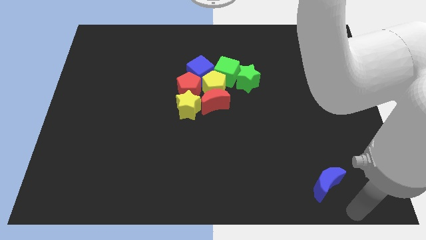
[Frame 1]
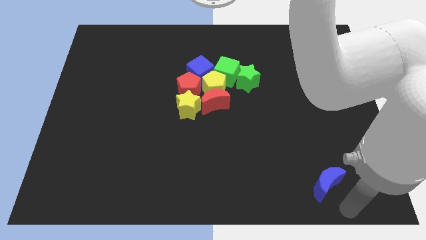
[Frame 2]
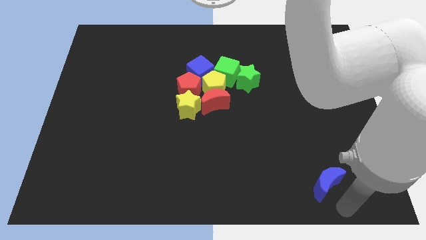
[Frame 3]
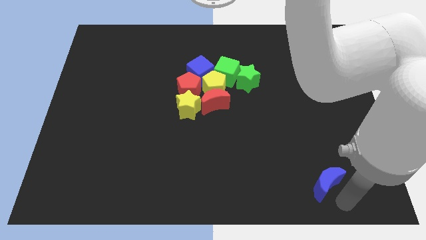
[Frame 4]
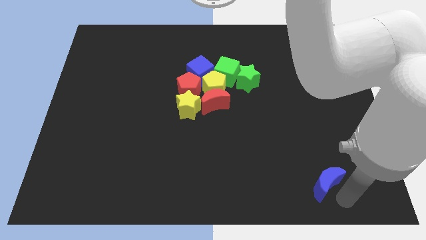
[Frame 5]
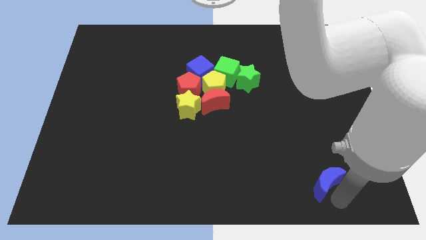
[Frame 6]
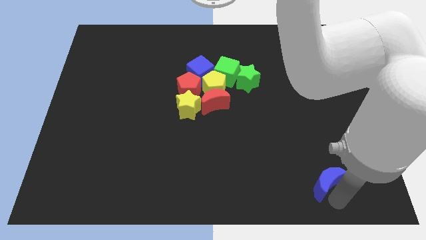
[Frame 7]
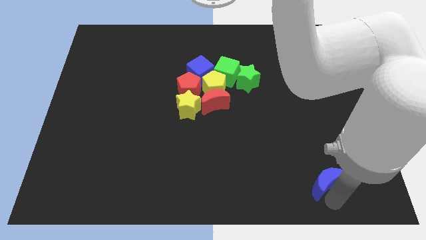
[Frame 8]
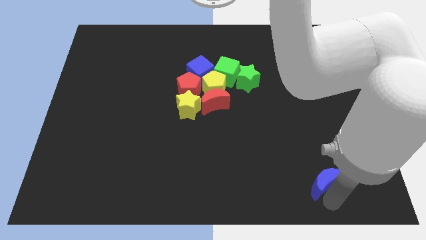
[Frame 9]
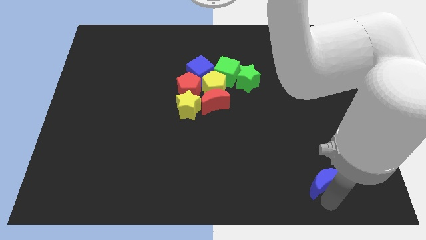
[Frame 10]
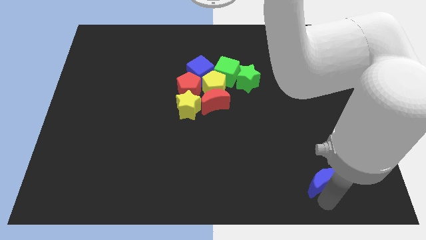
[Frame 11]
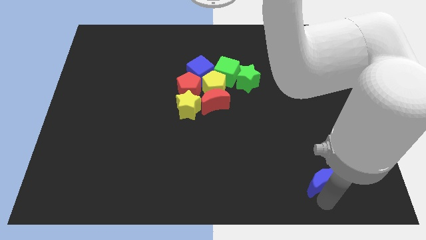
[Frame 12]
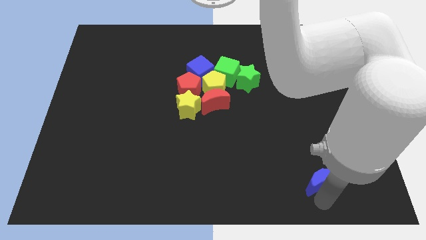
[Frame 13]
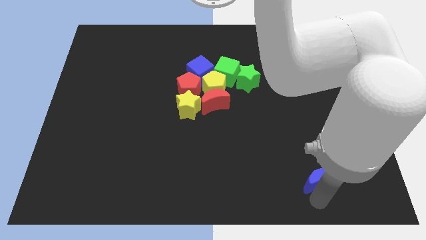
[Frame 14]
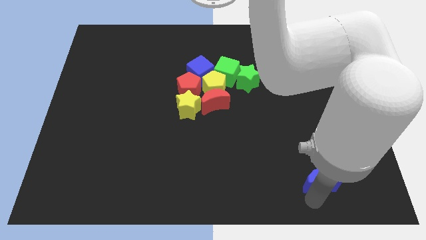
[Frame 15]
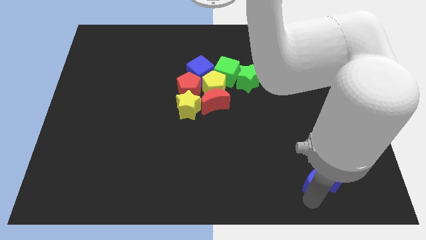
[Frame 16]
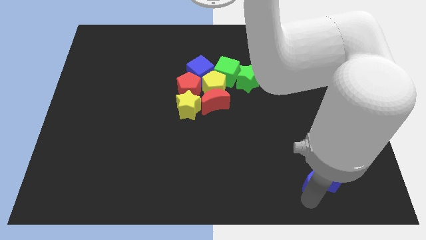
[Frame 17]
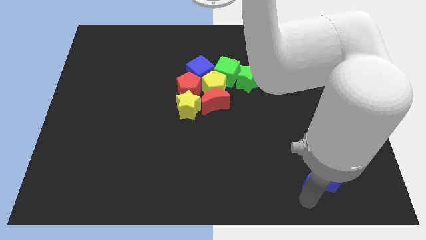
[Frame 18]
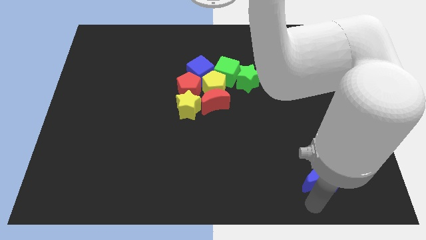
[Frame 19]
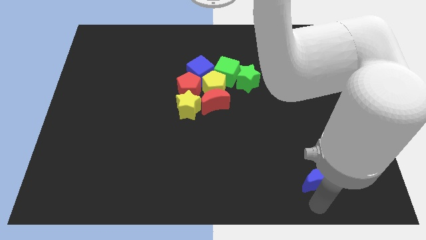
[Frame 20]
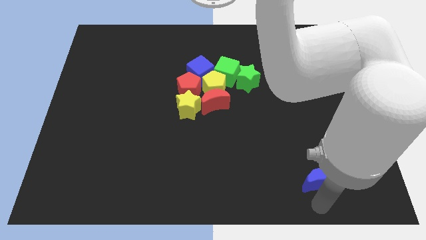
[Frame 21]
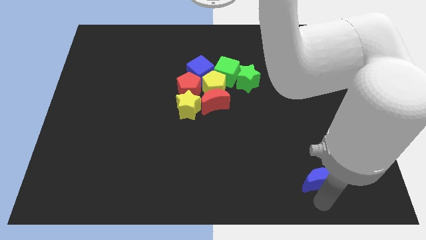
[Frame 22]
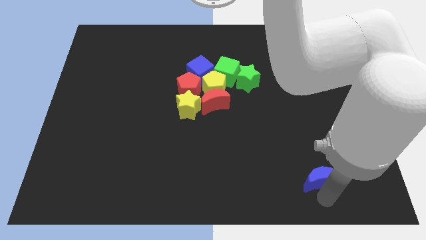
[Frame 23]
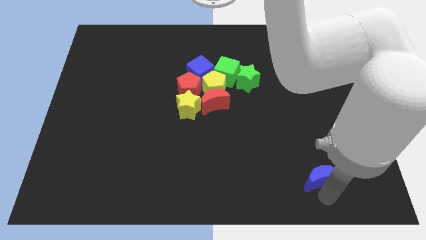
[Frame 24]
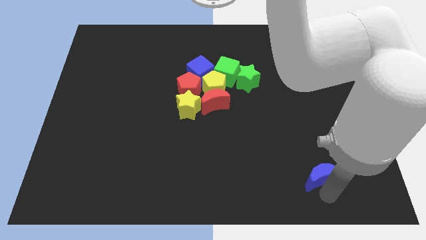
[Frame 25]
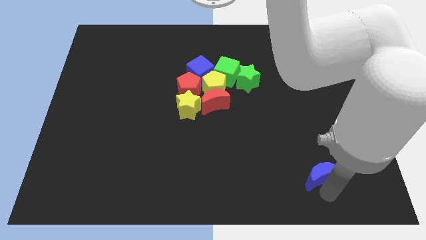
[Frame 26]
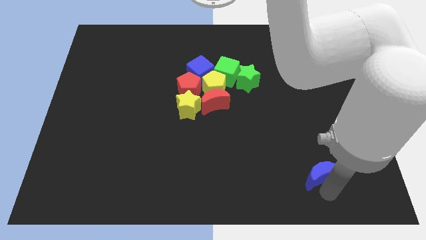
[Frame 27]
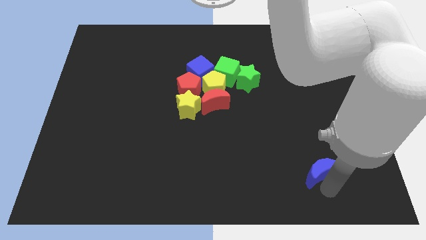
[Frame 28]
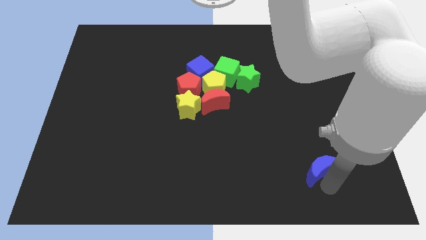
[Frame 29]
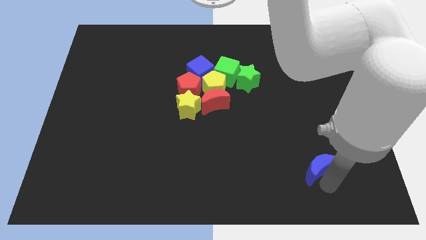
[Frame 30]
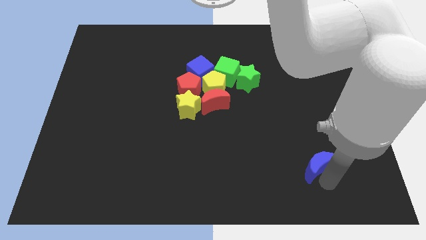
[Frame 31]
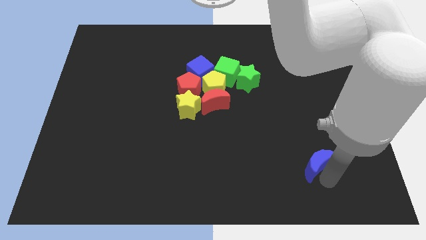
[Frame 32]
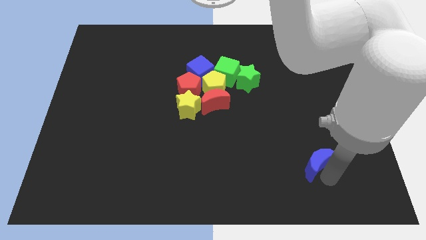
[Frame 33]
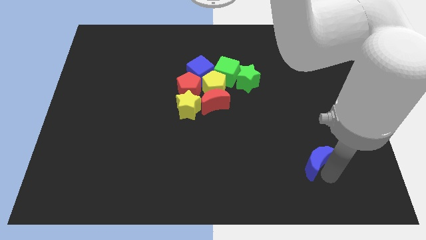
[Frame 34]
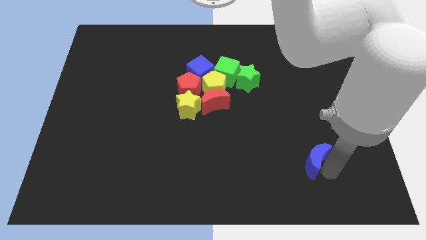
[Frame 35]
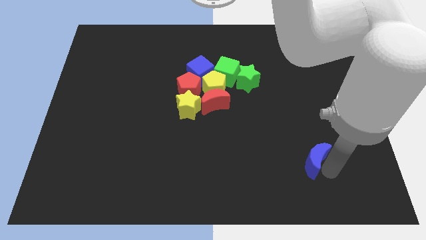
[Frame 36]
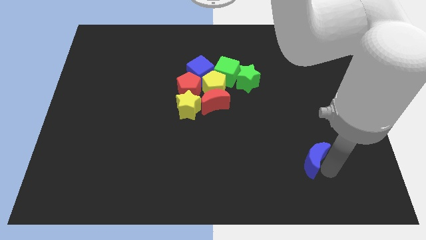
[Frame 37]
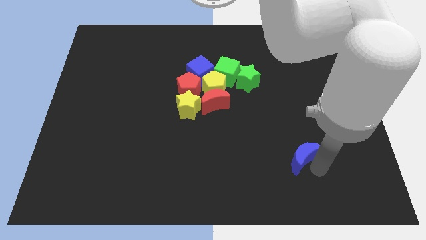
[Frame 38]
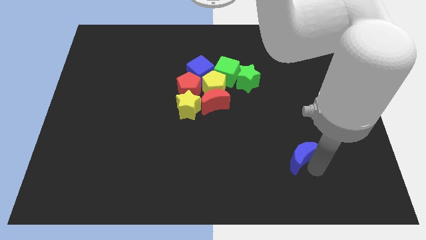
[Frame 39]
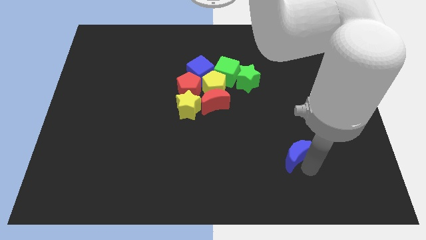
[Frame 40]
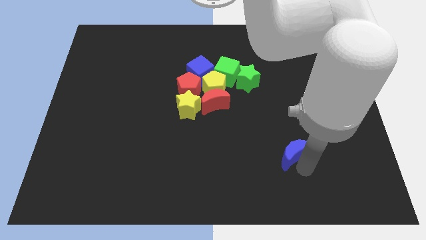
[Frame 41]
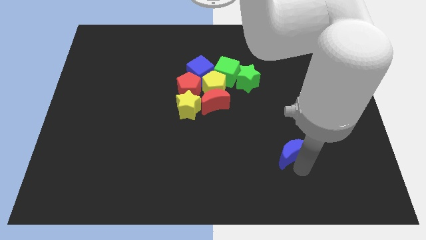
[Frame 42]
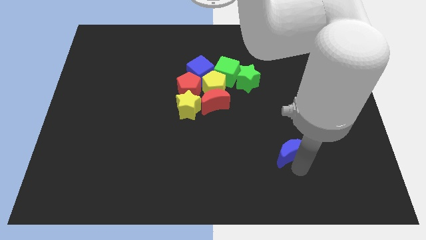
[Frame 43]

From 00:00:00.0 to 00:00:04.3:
push the blue crescent to the top of the board

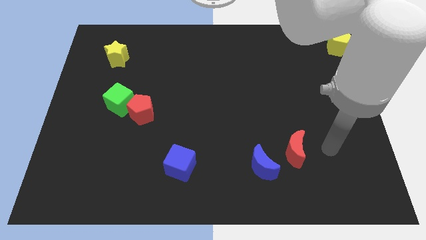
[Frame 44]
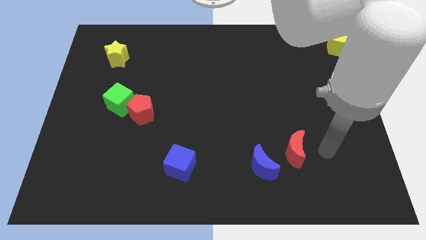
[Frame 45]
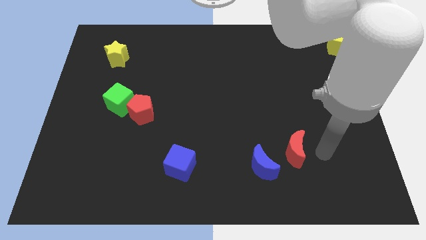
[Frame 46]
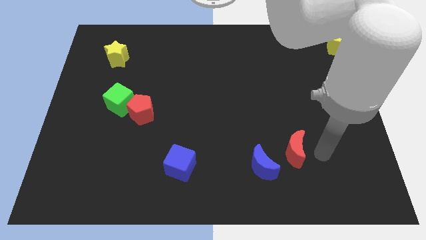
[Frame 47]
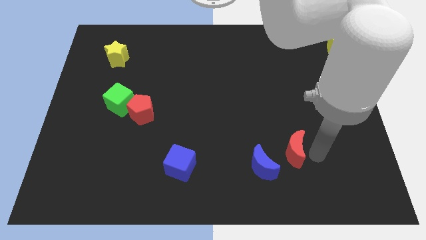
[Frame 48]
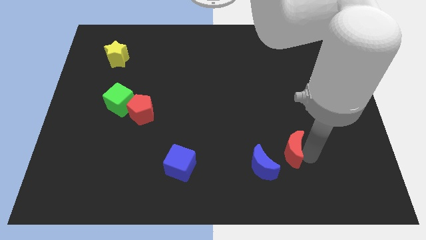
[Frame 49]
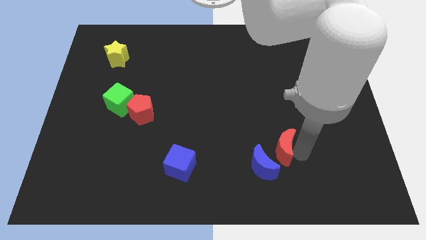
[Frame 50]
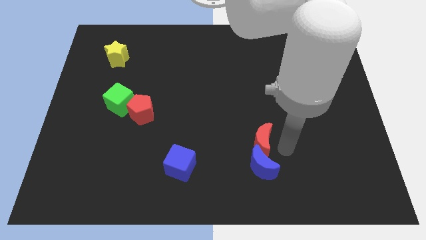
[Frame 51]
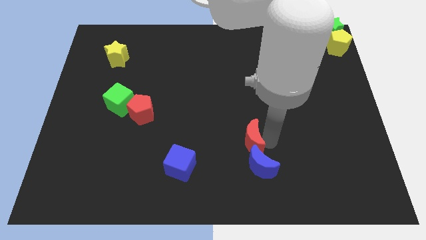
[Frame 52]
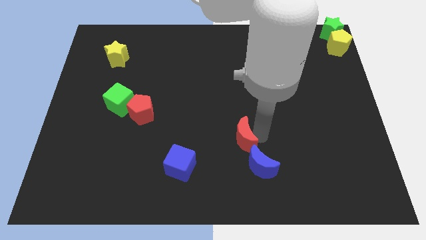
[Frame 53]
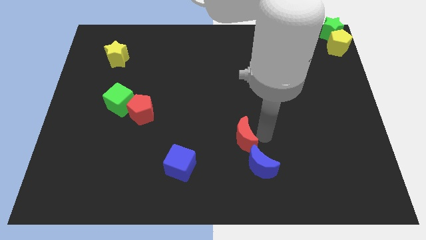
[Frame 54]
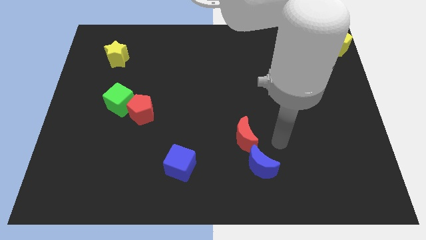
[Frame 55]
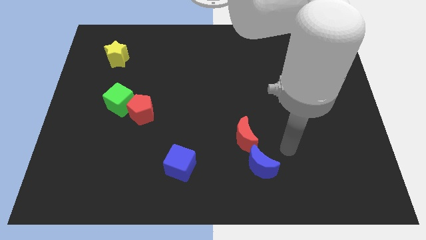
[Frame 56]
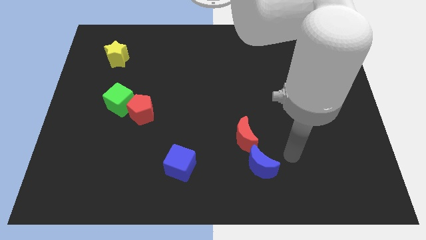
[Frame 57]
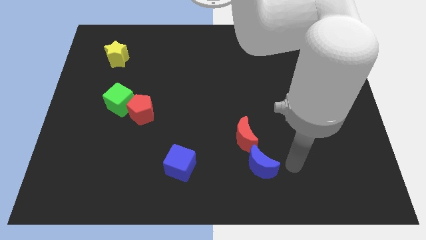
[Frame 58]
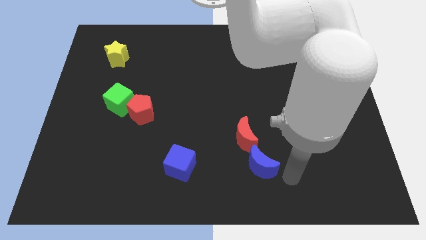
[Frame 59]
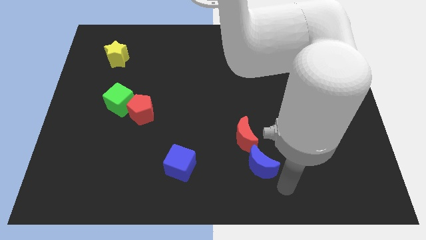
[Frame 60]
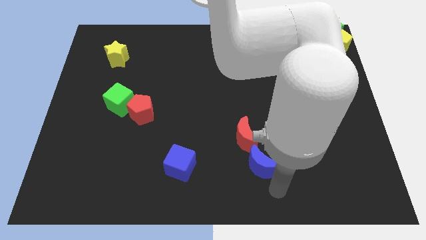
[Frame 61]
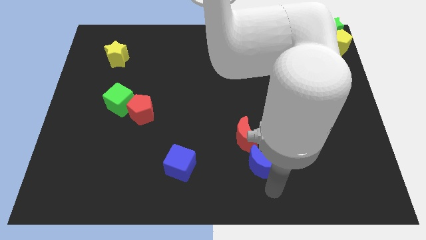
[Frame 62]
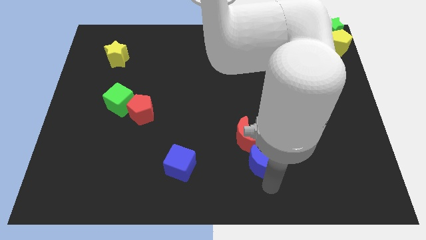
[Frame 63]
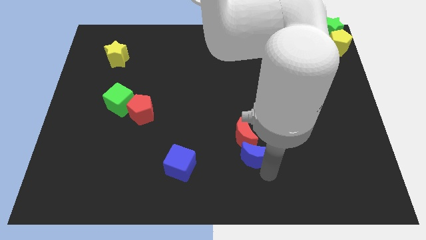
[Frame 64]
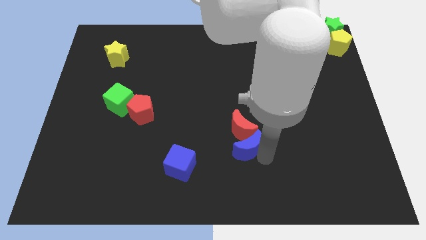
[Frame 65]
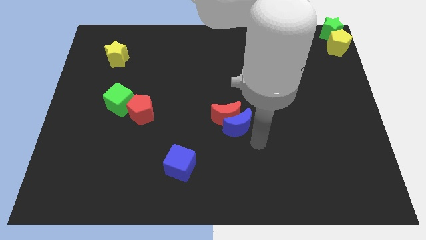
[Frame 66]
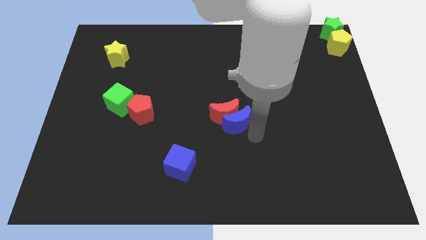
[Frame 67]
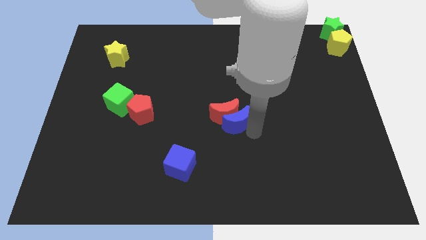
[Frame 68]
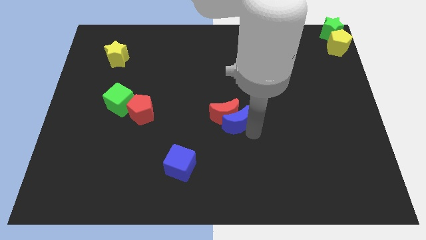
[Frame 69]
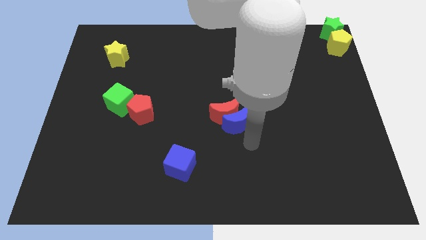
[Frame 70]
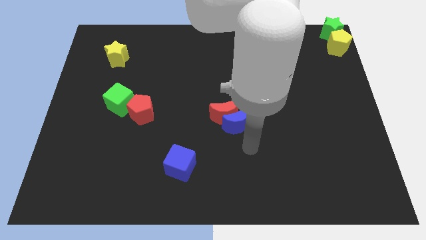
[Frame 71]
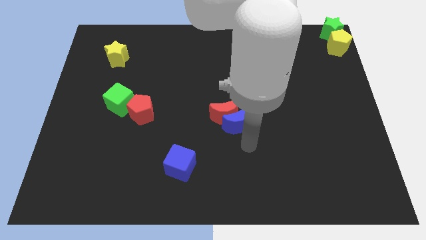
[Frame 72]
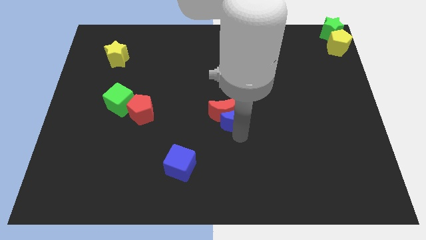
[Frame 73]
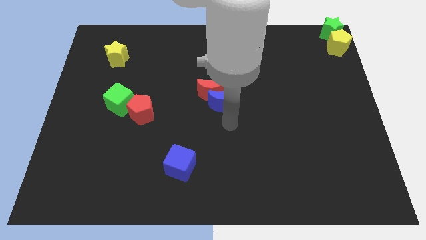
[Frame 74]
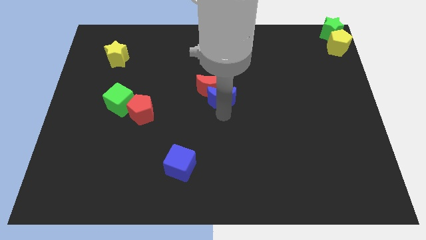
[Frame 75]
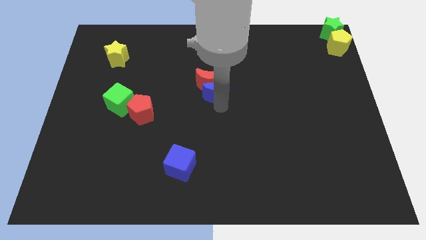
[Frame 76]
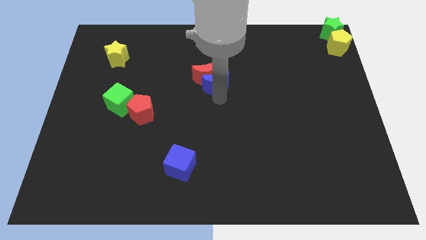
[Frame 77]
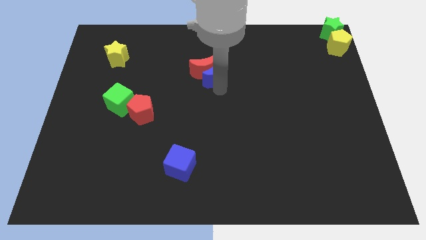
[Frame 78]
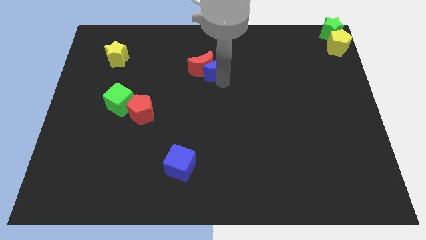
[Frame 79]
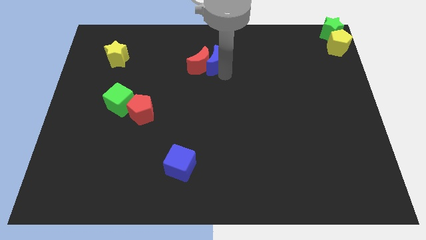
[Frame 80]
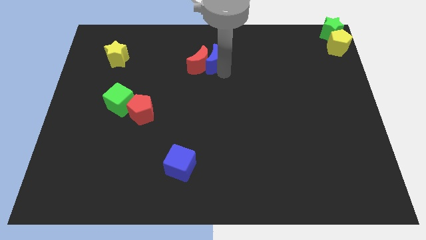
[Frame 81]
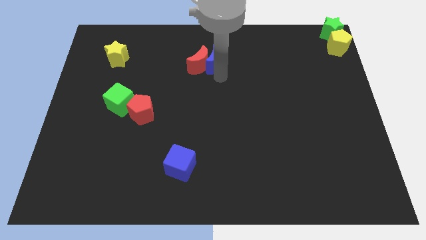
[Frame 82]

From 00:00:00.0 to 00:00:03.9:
push the blue crescent into the red crescent together

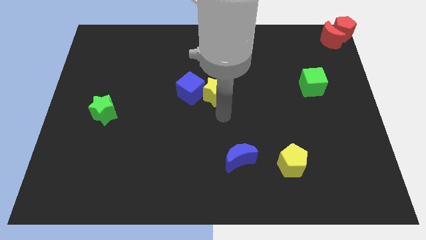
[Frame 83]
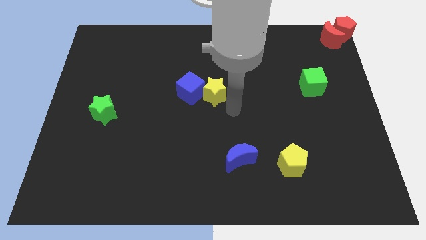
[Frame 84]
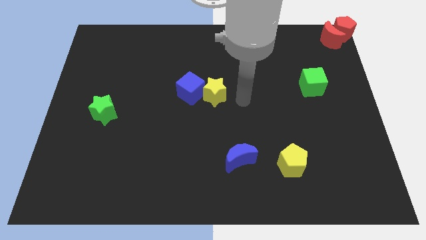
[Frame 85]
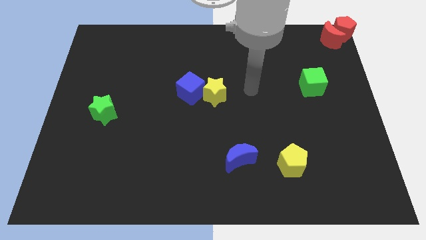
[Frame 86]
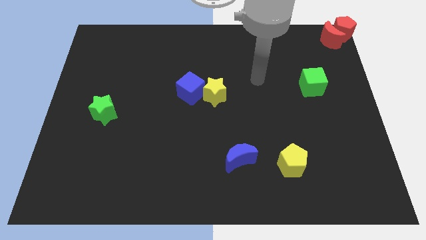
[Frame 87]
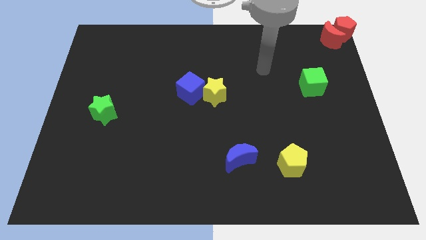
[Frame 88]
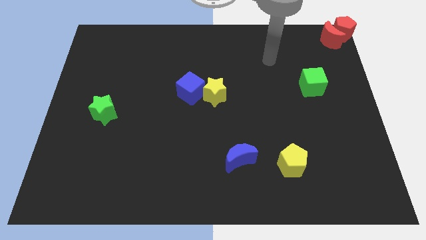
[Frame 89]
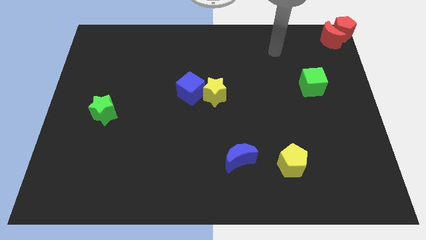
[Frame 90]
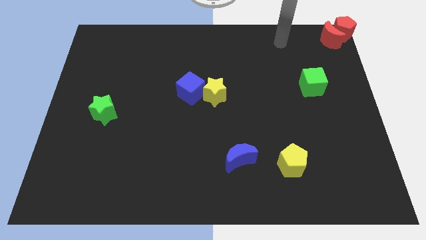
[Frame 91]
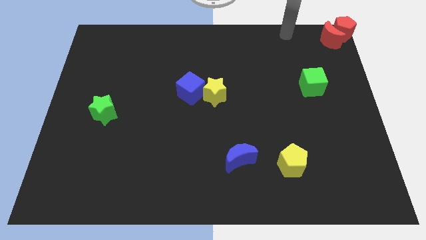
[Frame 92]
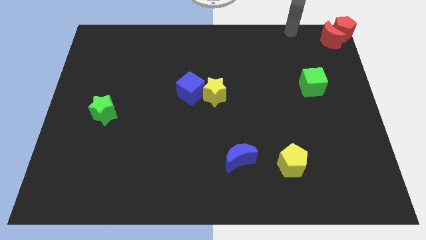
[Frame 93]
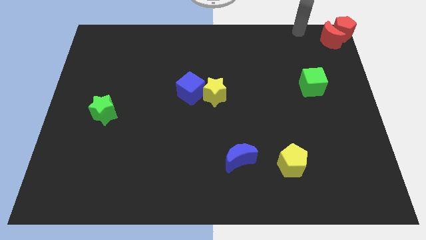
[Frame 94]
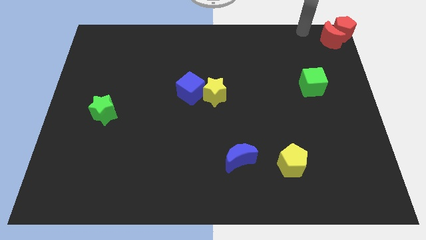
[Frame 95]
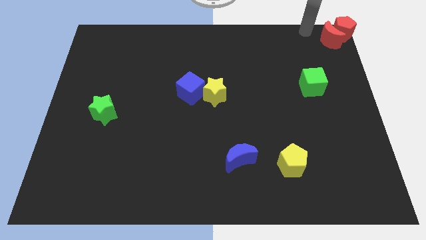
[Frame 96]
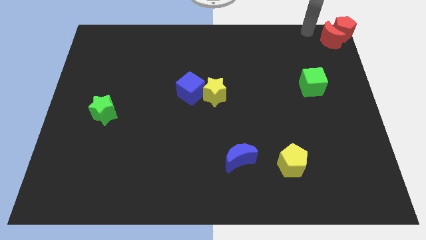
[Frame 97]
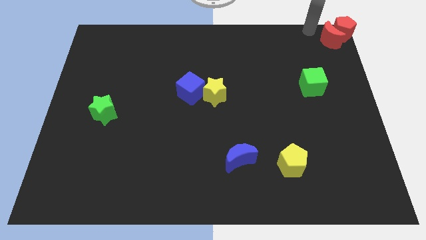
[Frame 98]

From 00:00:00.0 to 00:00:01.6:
move the arm to the left side of the red crescent
